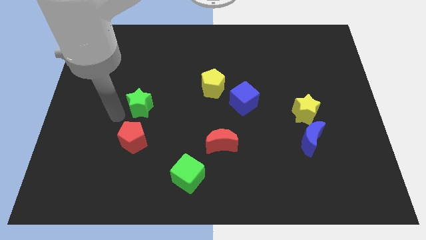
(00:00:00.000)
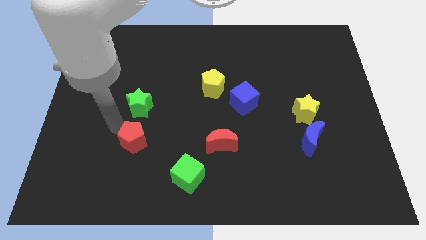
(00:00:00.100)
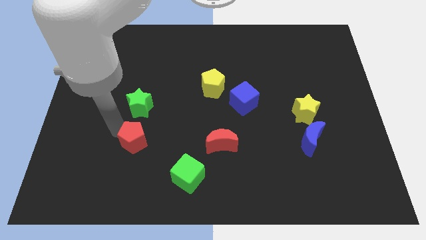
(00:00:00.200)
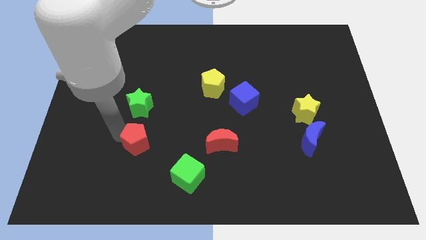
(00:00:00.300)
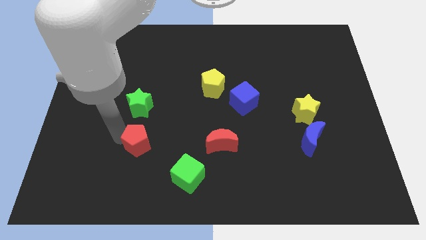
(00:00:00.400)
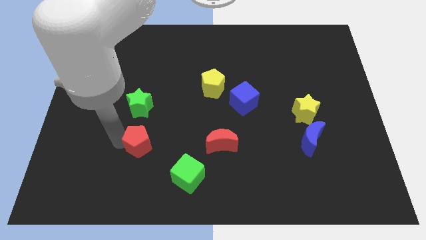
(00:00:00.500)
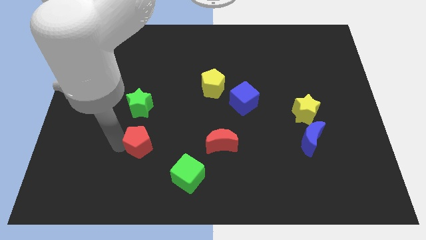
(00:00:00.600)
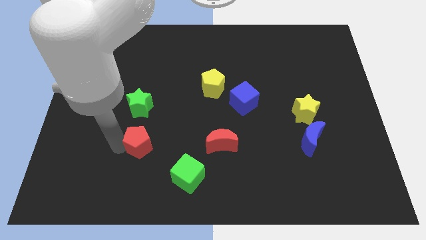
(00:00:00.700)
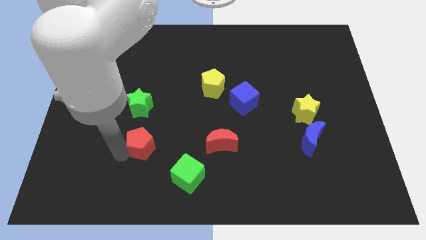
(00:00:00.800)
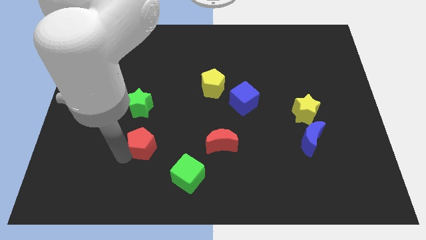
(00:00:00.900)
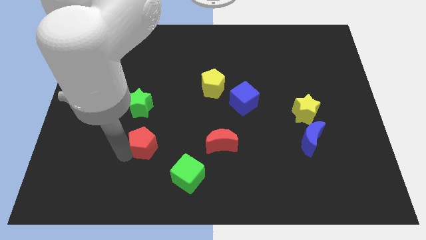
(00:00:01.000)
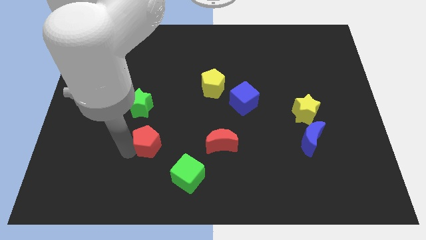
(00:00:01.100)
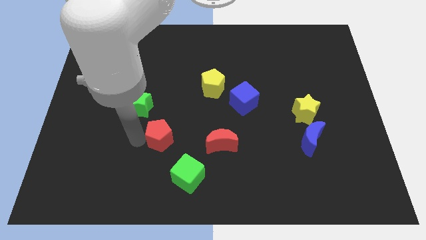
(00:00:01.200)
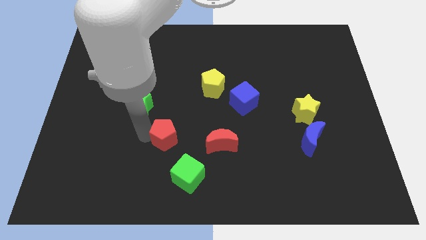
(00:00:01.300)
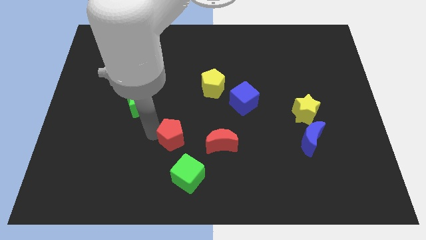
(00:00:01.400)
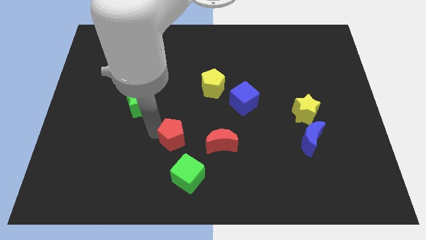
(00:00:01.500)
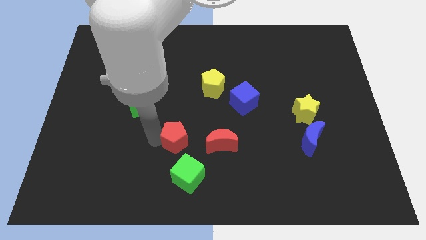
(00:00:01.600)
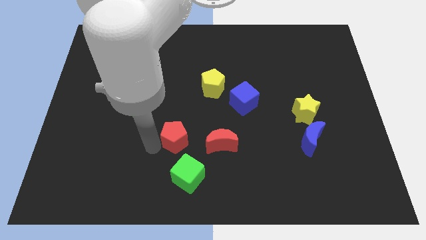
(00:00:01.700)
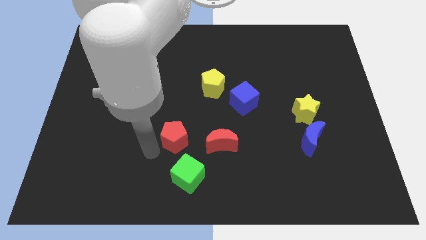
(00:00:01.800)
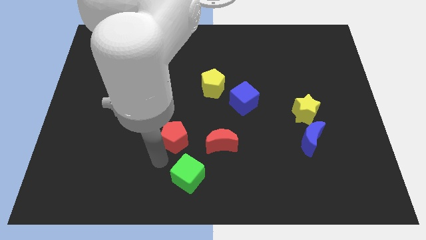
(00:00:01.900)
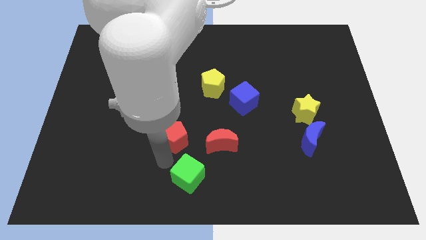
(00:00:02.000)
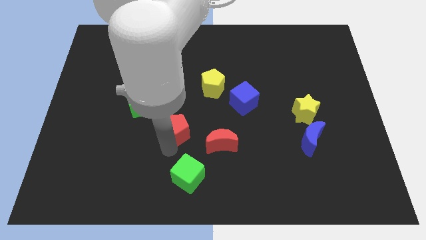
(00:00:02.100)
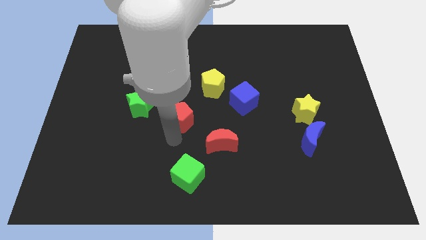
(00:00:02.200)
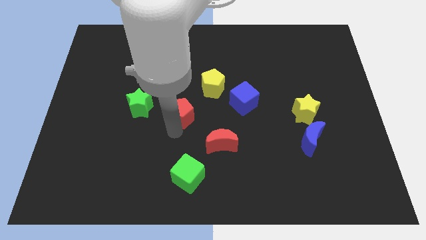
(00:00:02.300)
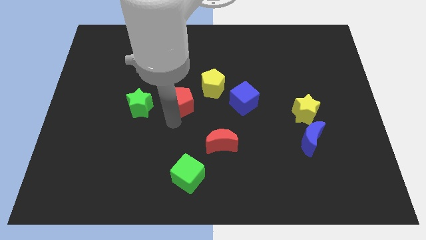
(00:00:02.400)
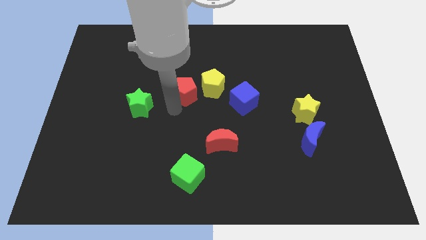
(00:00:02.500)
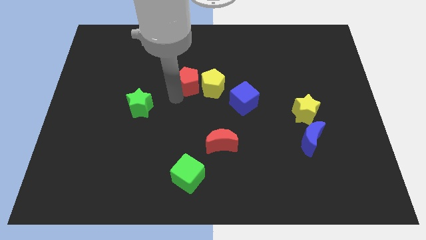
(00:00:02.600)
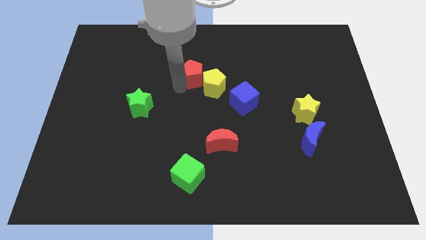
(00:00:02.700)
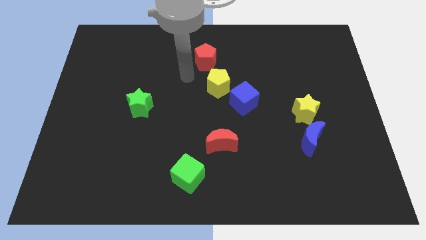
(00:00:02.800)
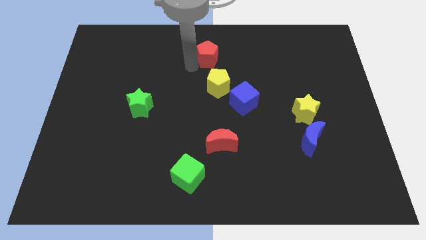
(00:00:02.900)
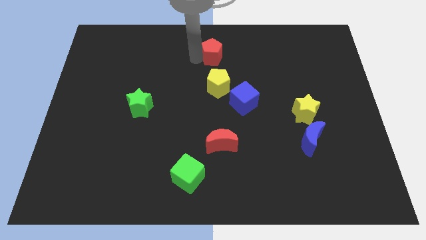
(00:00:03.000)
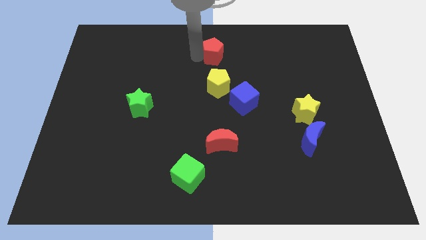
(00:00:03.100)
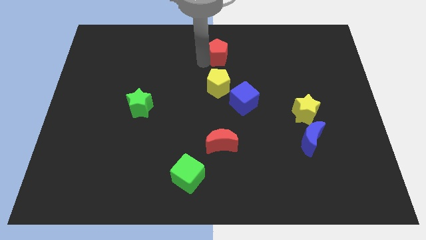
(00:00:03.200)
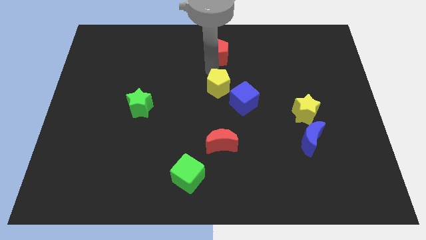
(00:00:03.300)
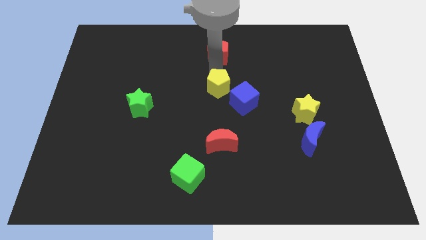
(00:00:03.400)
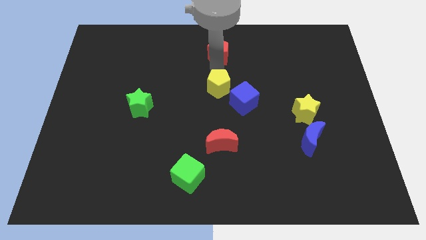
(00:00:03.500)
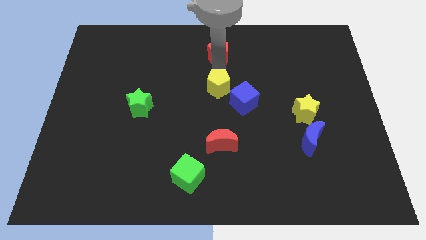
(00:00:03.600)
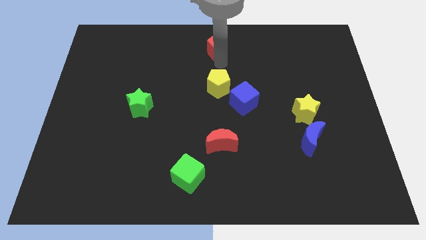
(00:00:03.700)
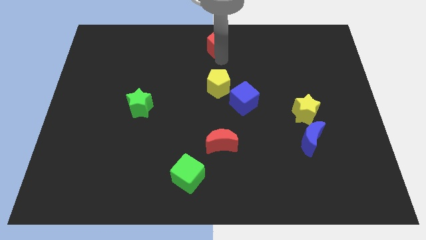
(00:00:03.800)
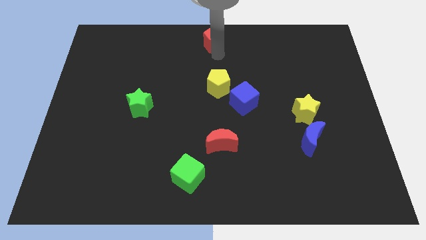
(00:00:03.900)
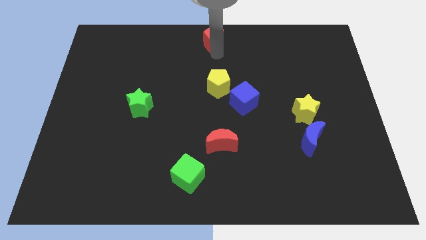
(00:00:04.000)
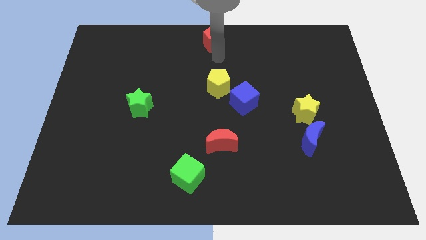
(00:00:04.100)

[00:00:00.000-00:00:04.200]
push the red pentagon to the top center of the board

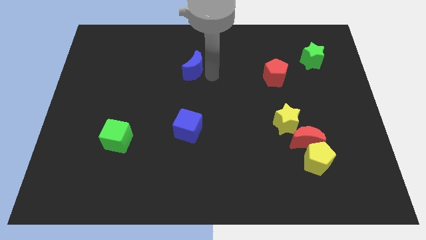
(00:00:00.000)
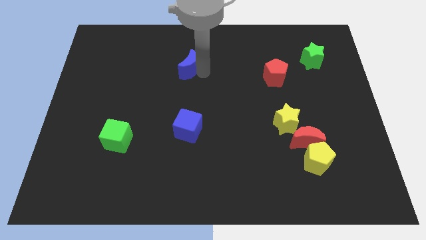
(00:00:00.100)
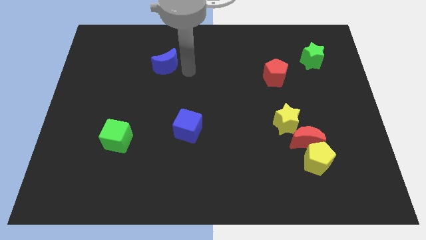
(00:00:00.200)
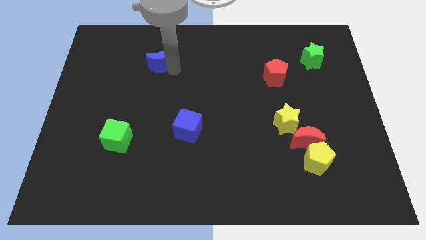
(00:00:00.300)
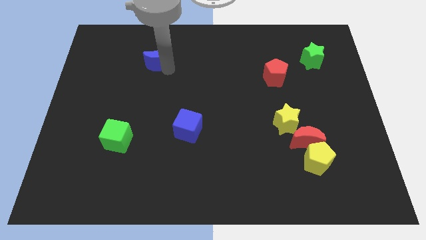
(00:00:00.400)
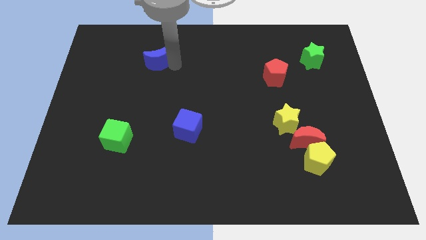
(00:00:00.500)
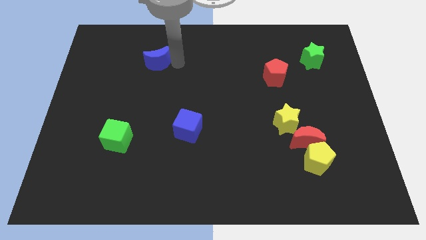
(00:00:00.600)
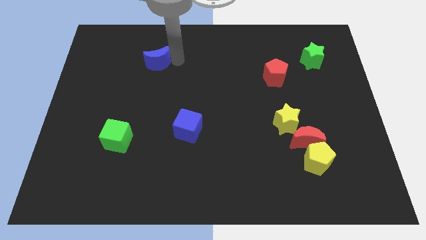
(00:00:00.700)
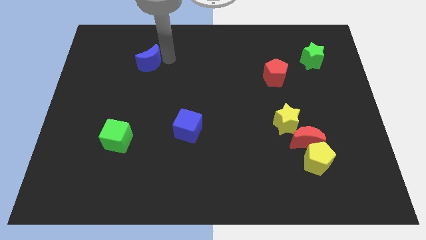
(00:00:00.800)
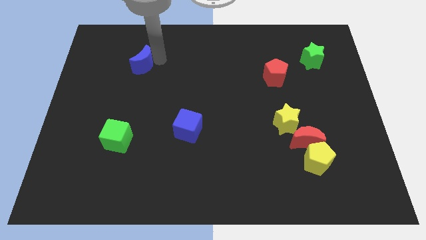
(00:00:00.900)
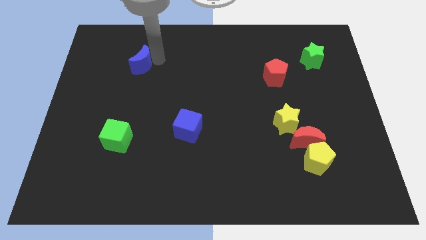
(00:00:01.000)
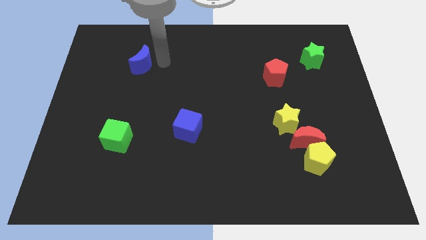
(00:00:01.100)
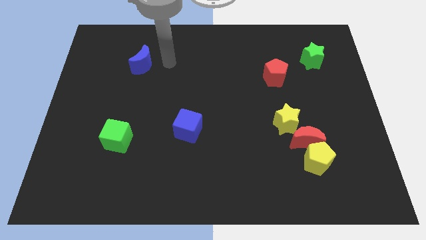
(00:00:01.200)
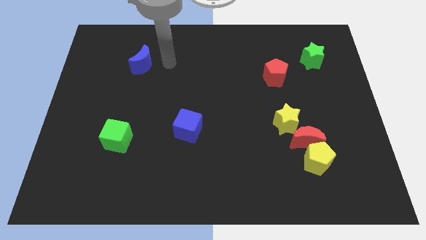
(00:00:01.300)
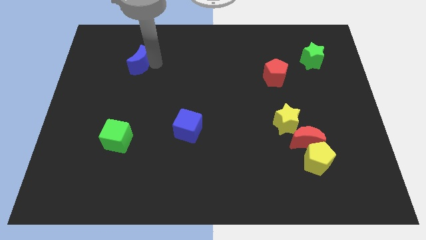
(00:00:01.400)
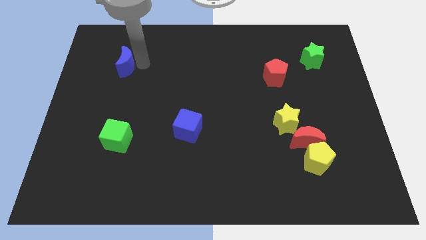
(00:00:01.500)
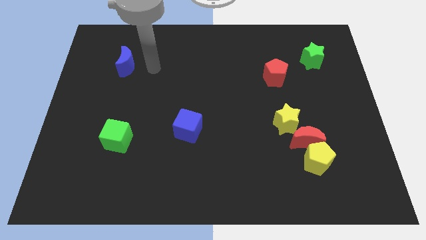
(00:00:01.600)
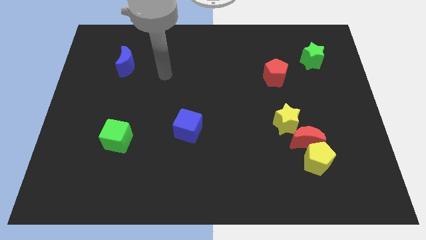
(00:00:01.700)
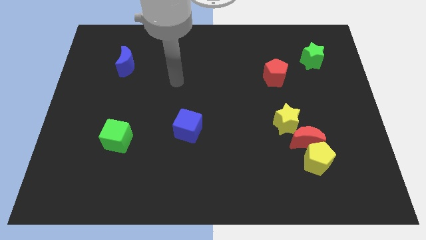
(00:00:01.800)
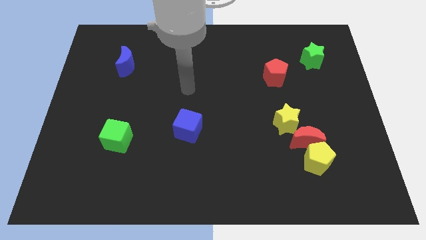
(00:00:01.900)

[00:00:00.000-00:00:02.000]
push blue crescent towards left

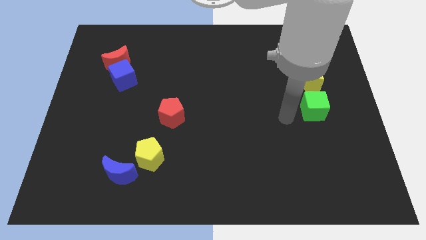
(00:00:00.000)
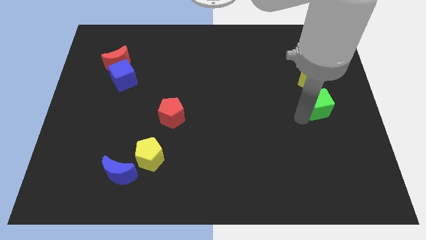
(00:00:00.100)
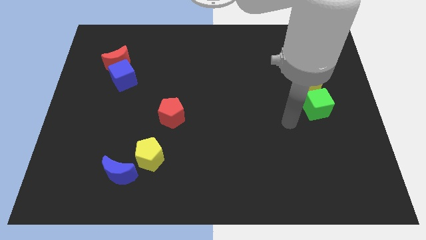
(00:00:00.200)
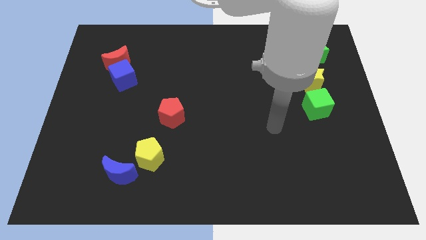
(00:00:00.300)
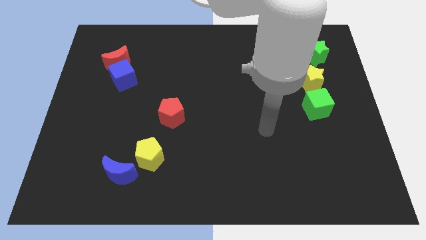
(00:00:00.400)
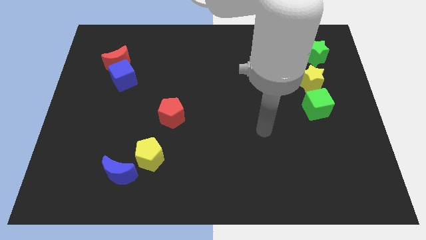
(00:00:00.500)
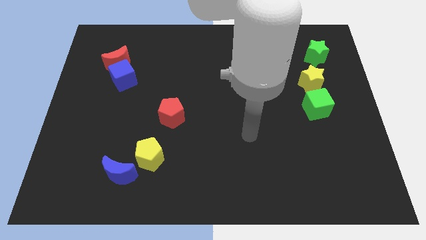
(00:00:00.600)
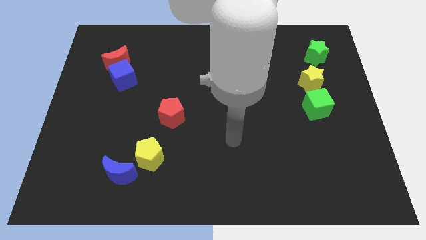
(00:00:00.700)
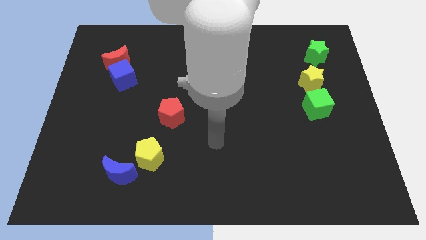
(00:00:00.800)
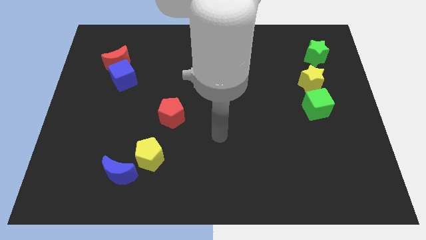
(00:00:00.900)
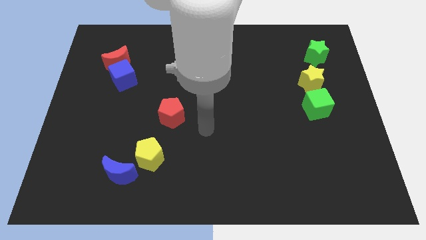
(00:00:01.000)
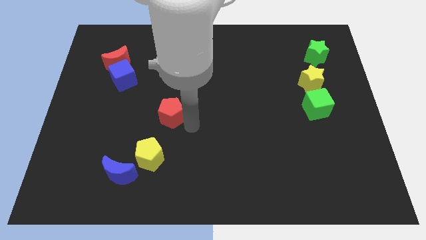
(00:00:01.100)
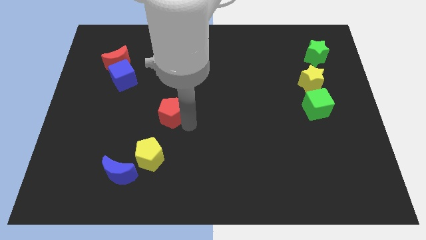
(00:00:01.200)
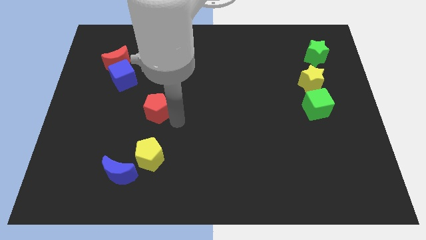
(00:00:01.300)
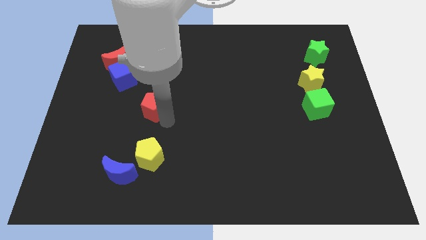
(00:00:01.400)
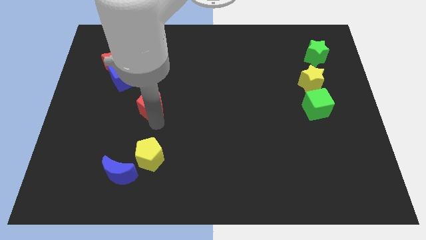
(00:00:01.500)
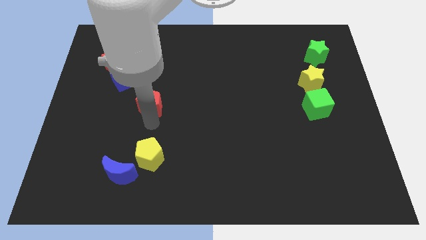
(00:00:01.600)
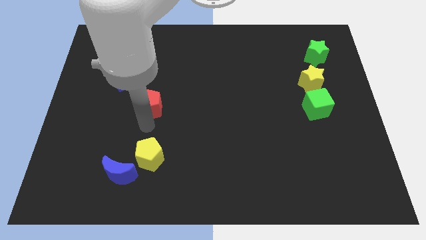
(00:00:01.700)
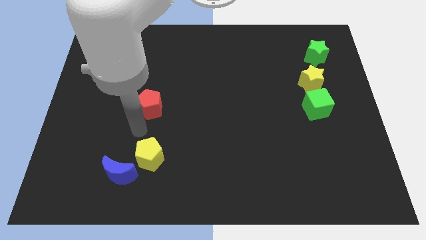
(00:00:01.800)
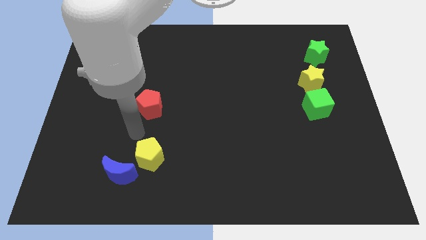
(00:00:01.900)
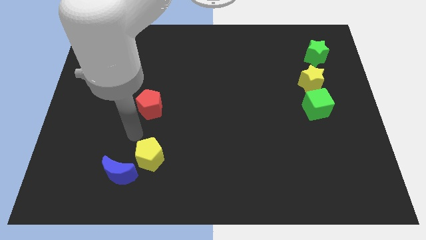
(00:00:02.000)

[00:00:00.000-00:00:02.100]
slightly move the red pentagon right to the board

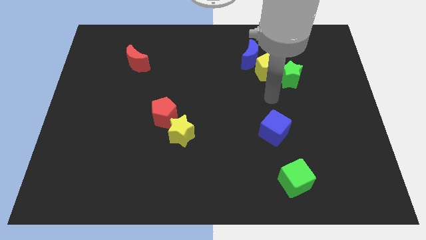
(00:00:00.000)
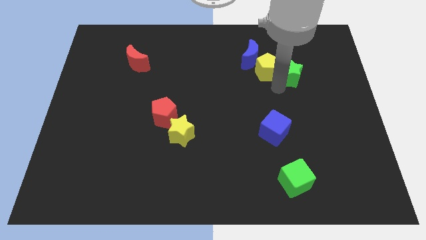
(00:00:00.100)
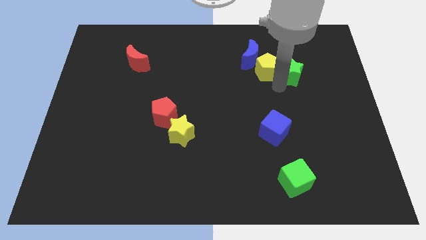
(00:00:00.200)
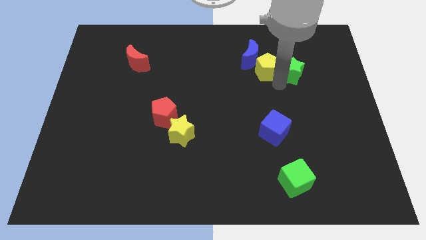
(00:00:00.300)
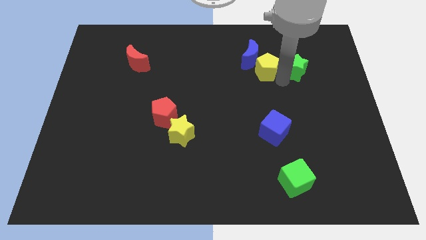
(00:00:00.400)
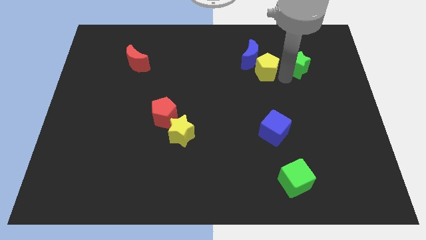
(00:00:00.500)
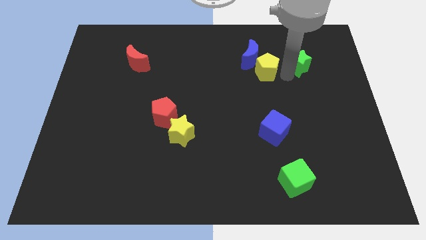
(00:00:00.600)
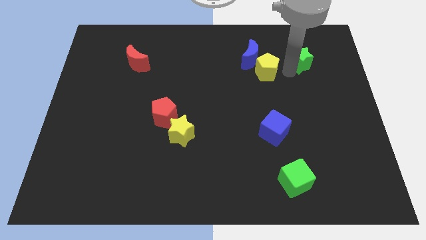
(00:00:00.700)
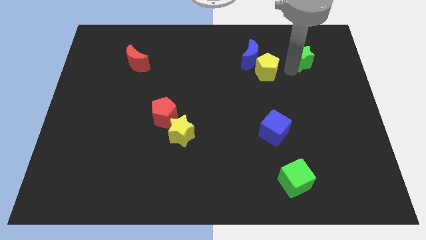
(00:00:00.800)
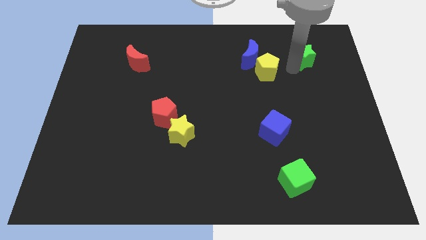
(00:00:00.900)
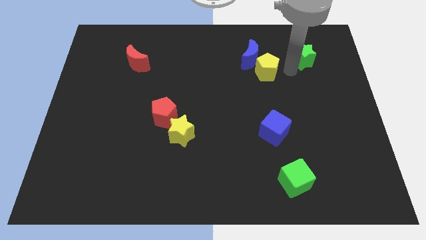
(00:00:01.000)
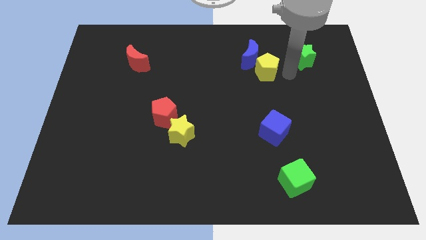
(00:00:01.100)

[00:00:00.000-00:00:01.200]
move the green star slightly up
